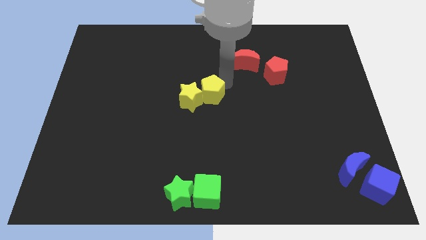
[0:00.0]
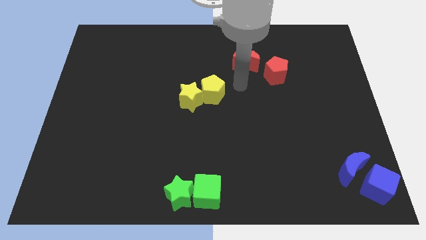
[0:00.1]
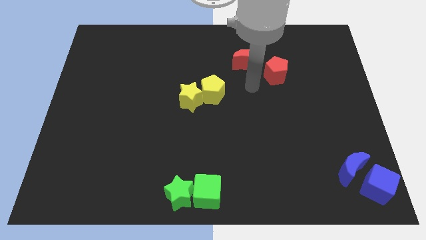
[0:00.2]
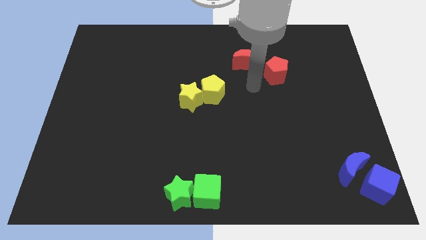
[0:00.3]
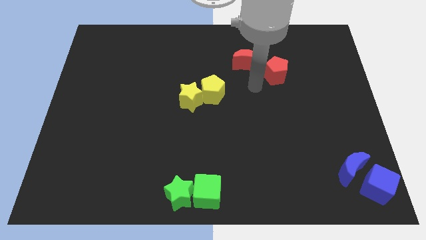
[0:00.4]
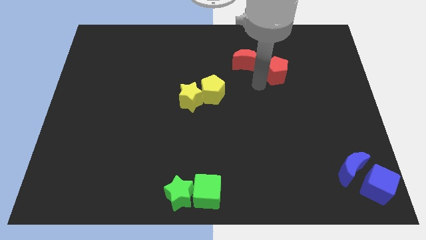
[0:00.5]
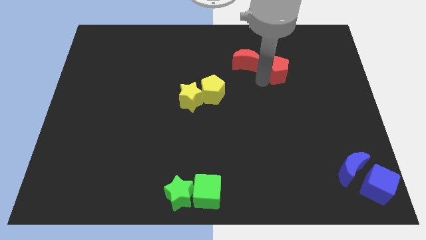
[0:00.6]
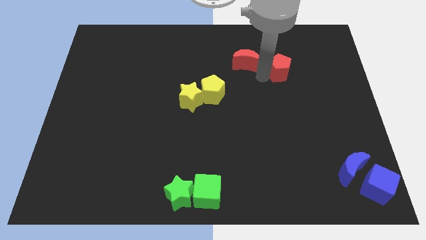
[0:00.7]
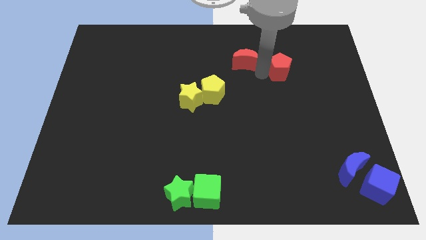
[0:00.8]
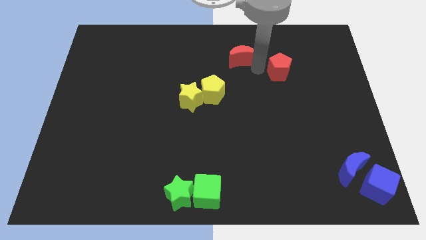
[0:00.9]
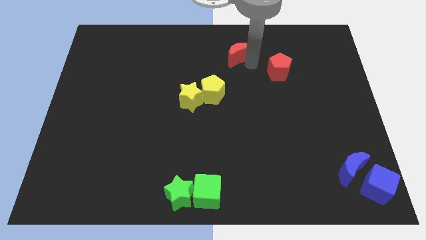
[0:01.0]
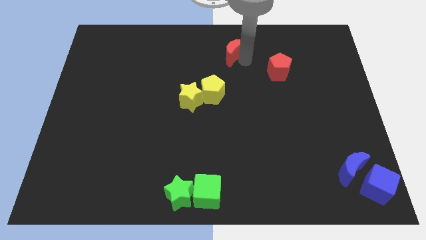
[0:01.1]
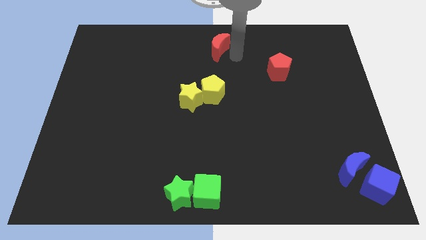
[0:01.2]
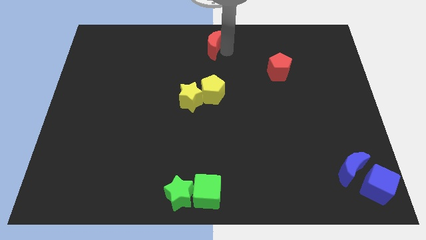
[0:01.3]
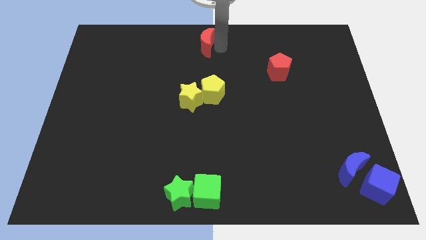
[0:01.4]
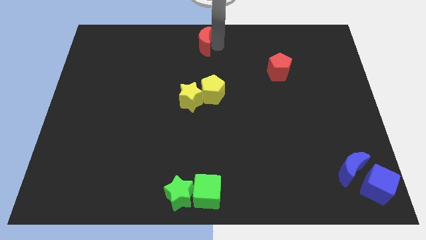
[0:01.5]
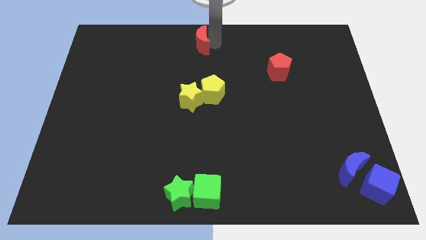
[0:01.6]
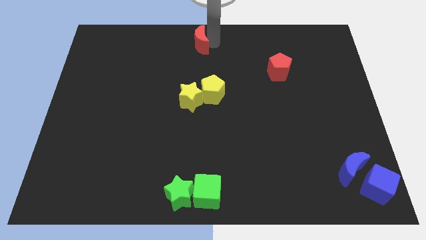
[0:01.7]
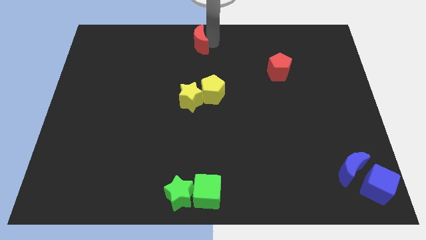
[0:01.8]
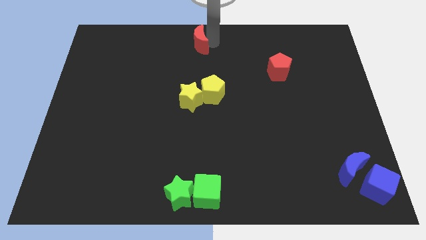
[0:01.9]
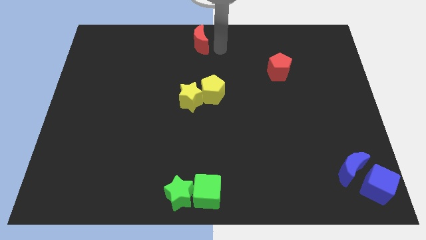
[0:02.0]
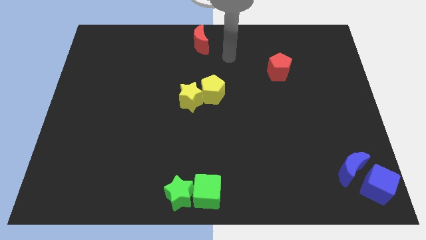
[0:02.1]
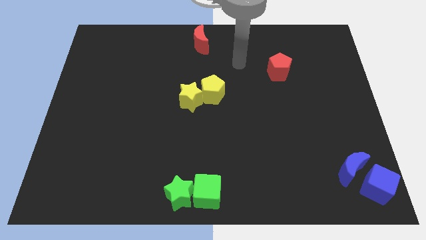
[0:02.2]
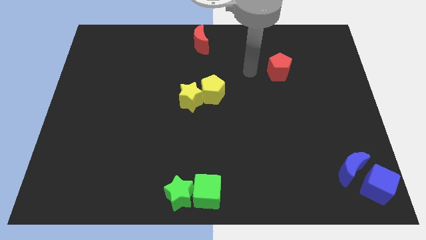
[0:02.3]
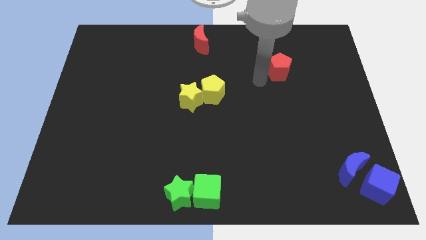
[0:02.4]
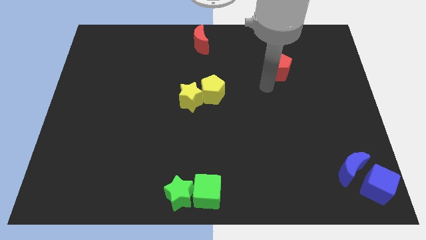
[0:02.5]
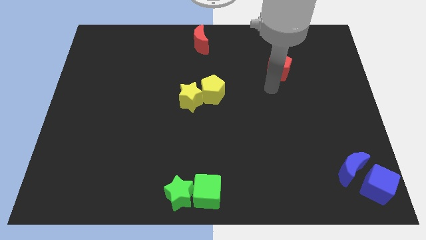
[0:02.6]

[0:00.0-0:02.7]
move the red crescent to the top center of the board

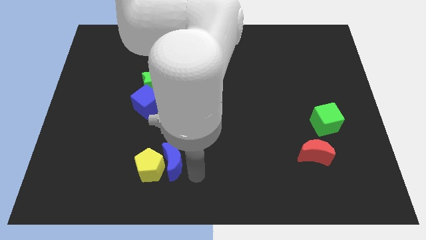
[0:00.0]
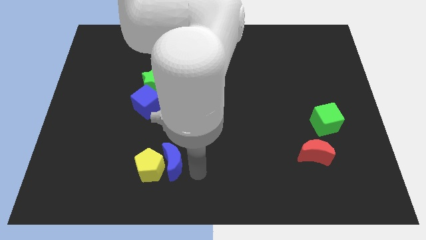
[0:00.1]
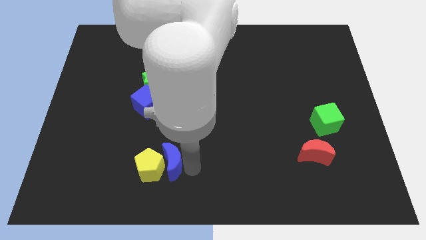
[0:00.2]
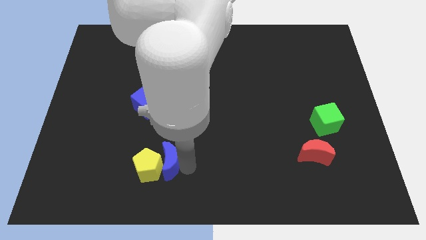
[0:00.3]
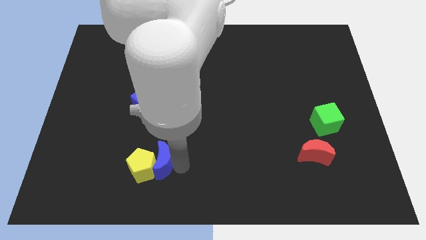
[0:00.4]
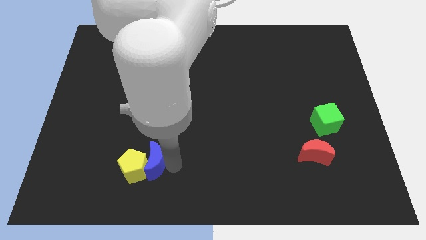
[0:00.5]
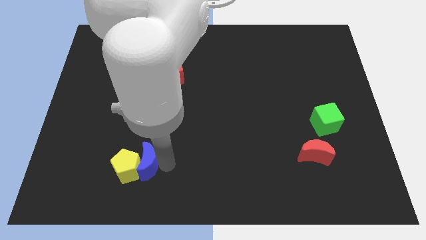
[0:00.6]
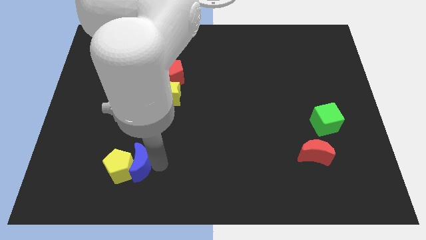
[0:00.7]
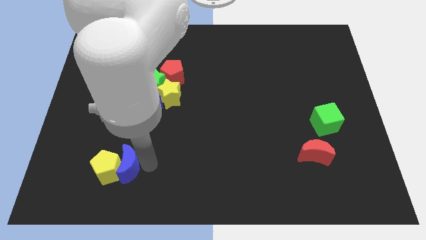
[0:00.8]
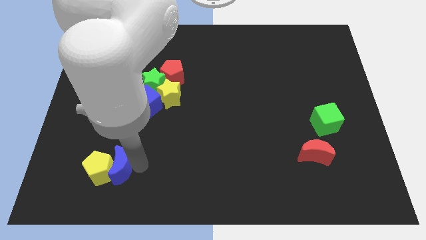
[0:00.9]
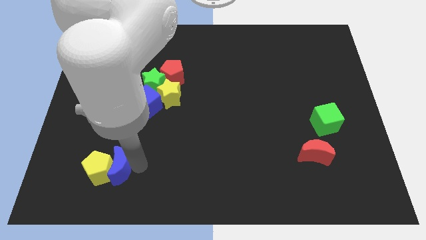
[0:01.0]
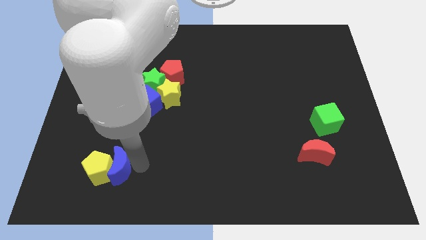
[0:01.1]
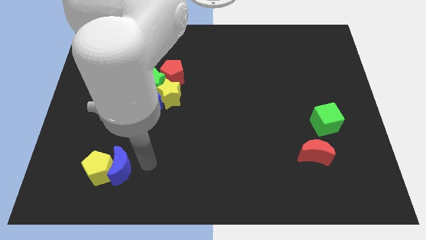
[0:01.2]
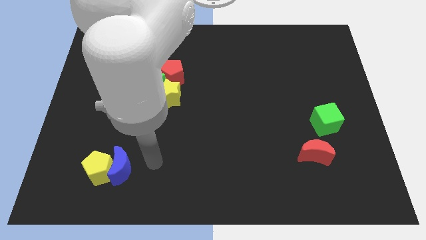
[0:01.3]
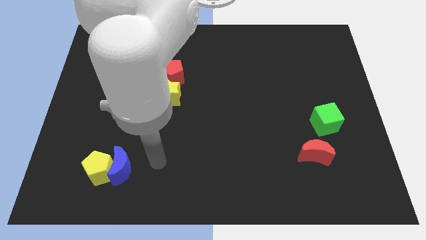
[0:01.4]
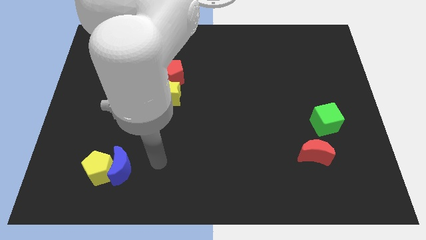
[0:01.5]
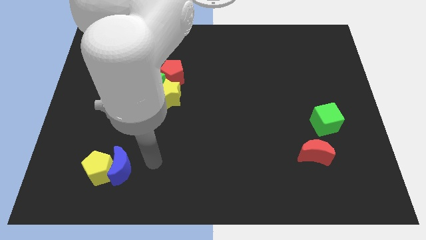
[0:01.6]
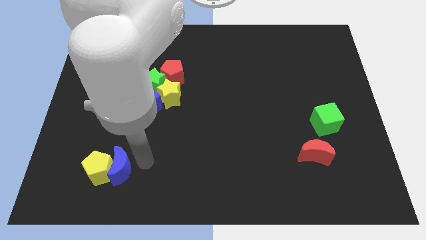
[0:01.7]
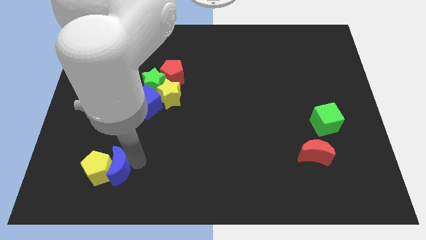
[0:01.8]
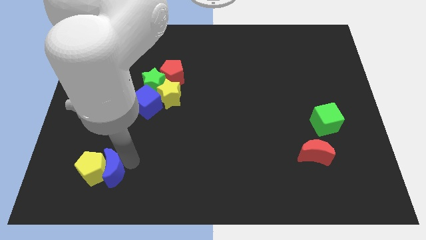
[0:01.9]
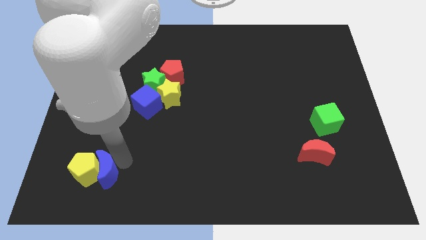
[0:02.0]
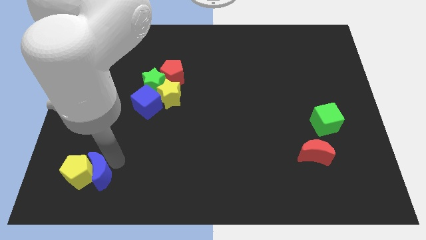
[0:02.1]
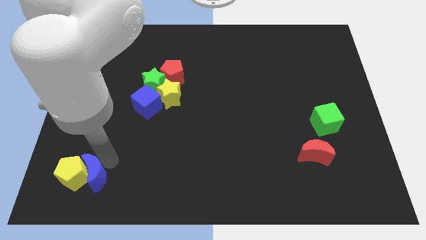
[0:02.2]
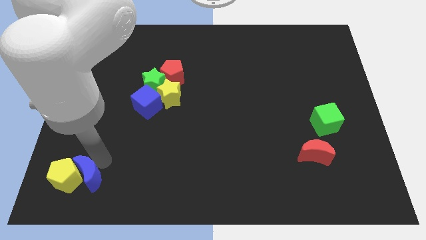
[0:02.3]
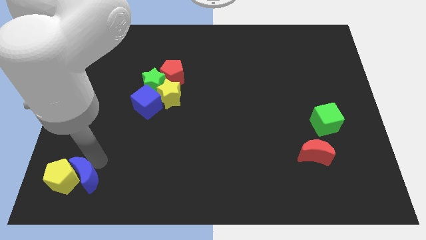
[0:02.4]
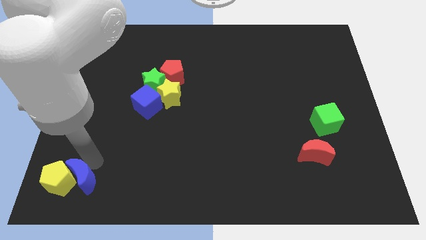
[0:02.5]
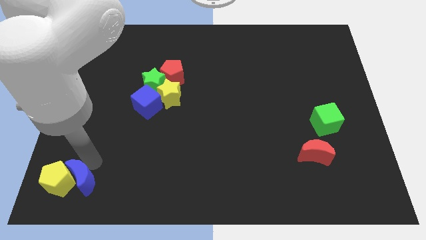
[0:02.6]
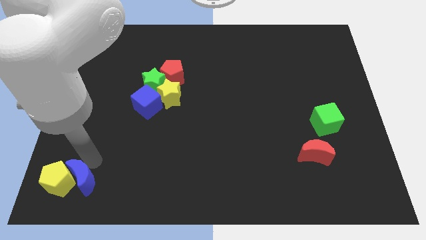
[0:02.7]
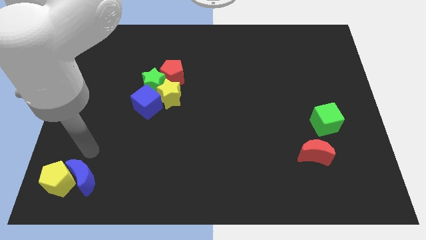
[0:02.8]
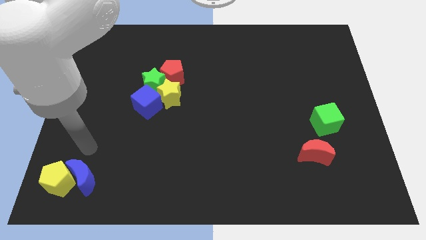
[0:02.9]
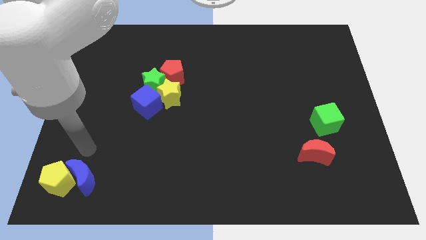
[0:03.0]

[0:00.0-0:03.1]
push the yellow pentagon and blue crescent towards the bottom left of the board

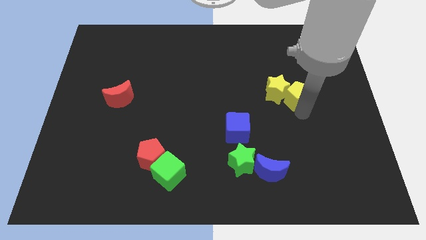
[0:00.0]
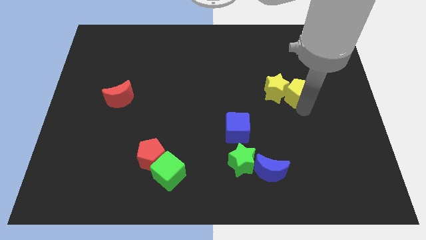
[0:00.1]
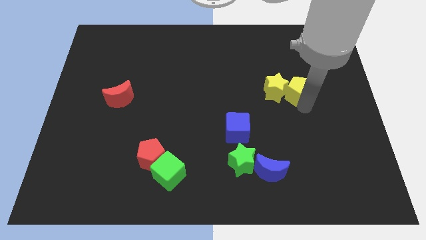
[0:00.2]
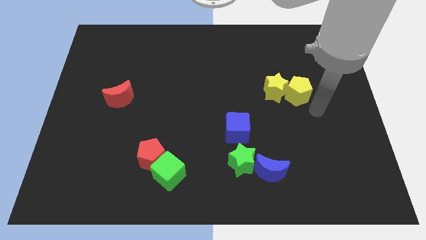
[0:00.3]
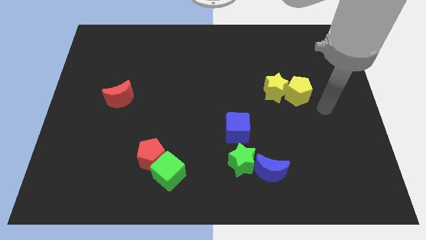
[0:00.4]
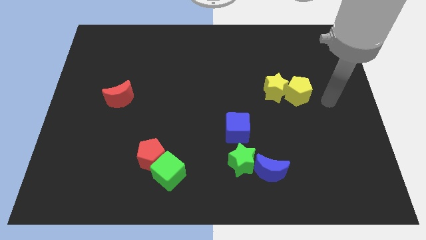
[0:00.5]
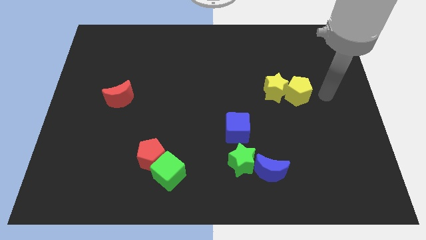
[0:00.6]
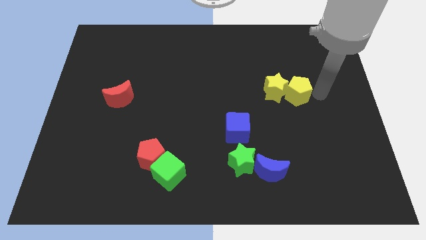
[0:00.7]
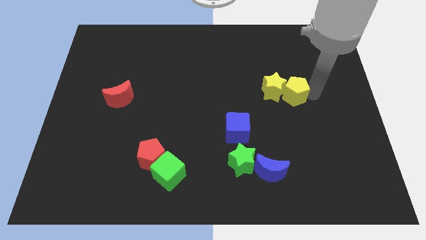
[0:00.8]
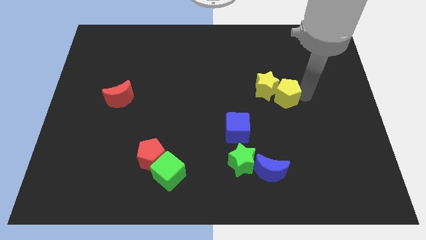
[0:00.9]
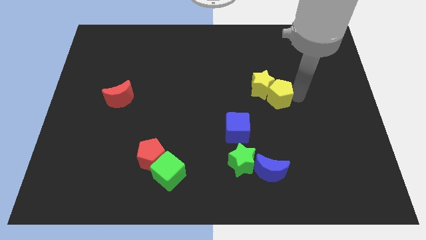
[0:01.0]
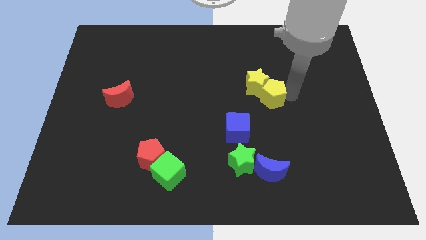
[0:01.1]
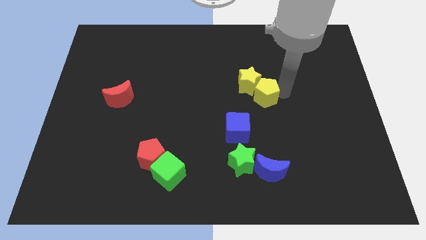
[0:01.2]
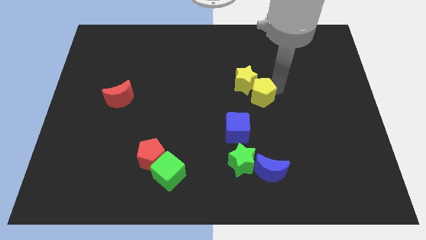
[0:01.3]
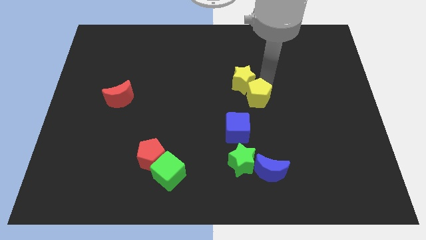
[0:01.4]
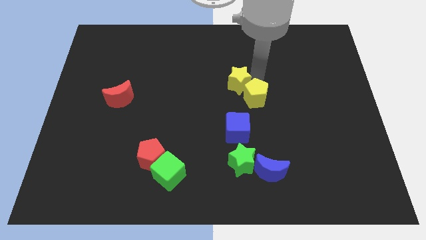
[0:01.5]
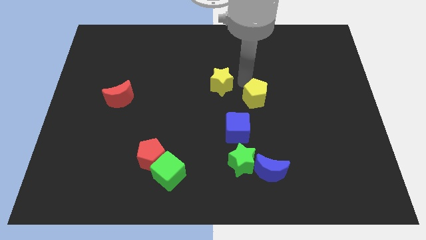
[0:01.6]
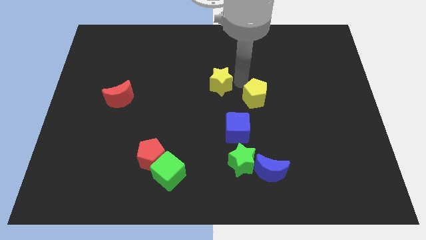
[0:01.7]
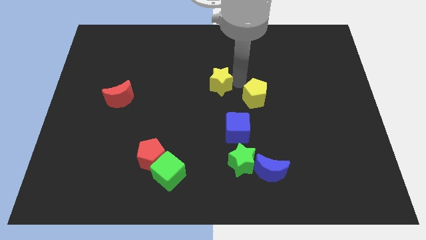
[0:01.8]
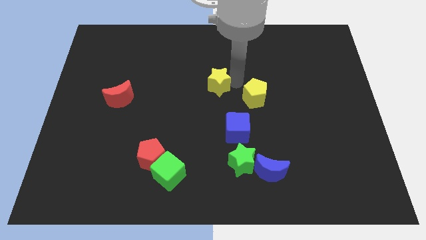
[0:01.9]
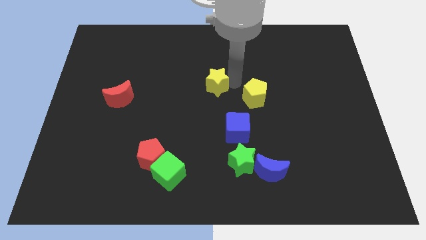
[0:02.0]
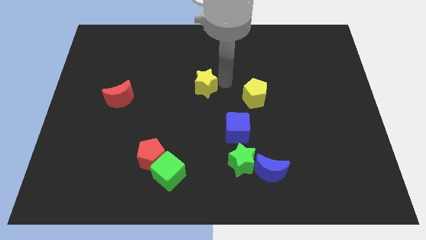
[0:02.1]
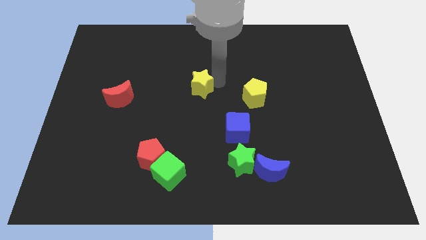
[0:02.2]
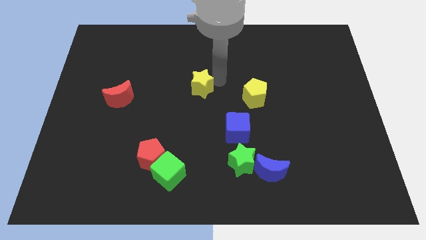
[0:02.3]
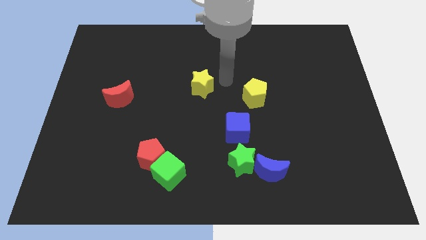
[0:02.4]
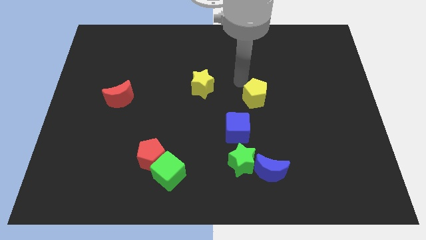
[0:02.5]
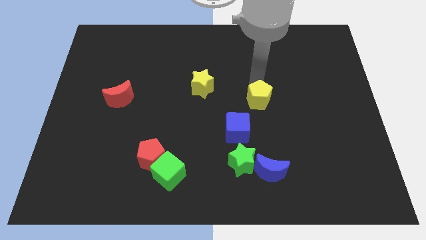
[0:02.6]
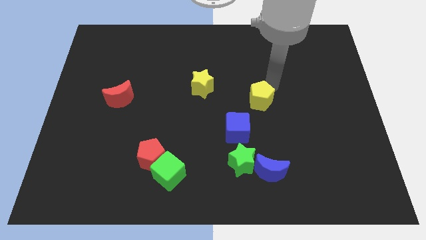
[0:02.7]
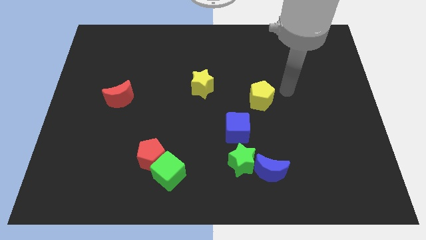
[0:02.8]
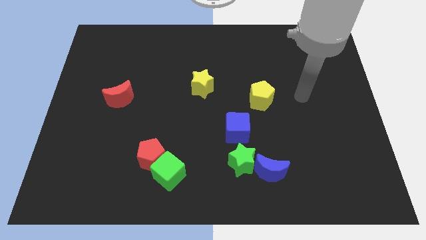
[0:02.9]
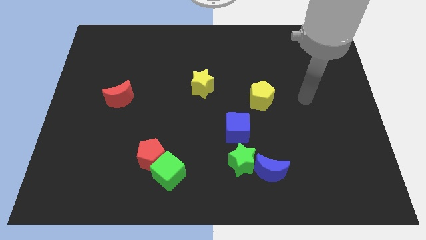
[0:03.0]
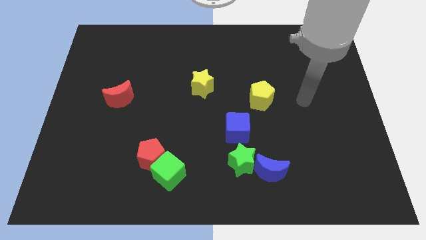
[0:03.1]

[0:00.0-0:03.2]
separate yellow blocks from each other
